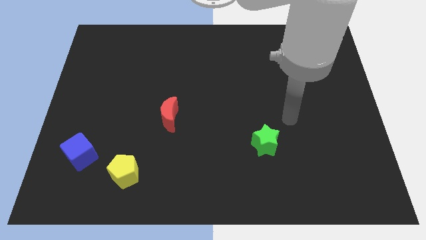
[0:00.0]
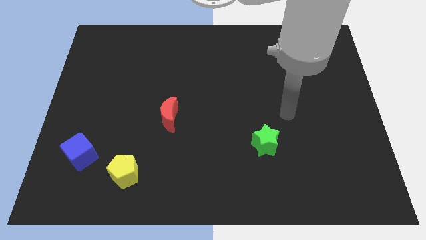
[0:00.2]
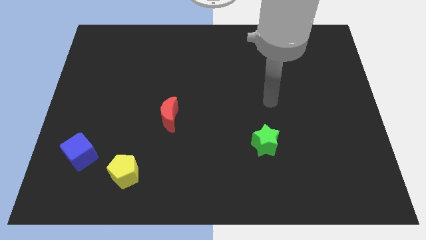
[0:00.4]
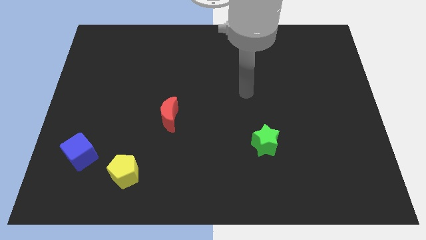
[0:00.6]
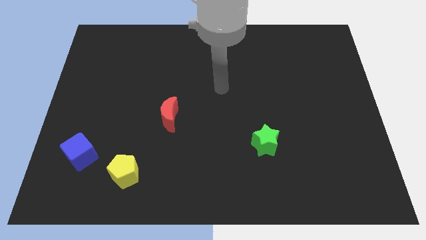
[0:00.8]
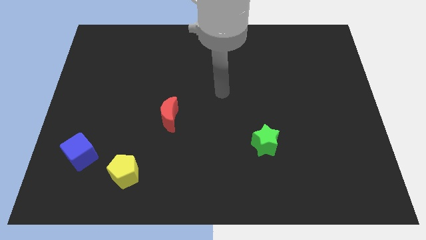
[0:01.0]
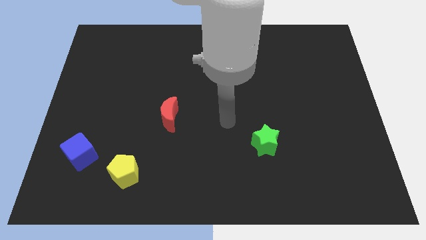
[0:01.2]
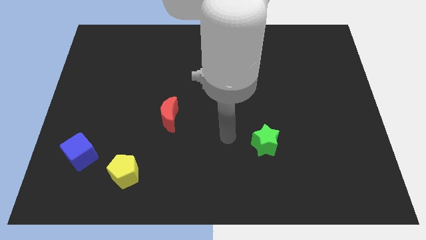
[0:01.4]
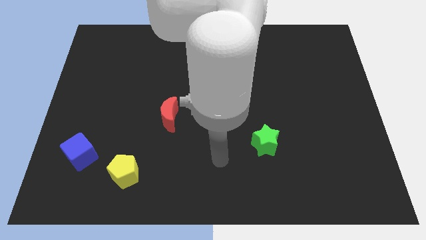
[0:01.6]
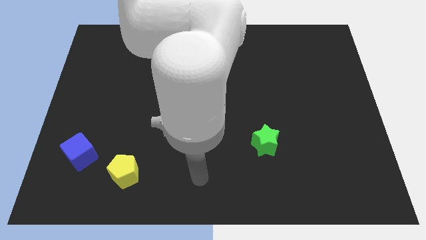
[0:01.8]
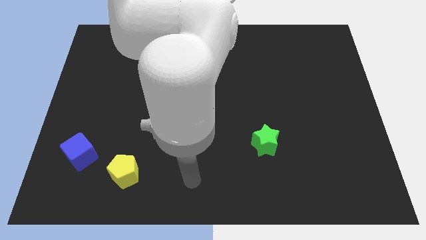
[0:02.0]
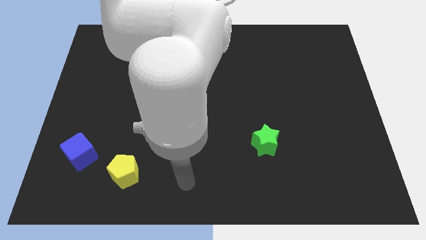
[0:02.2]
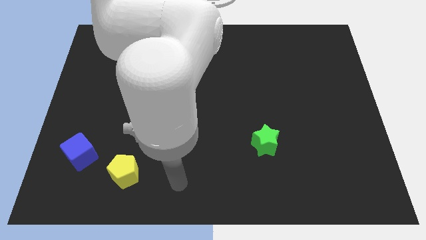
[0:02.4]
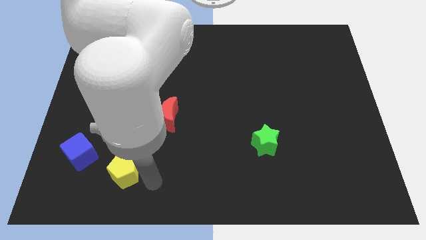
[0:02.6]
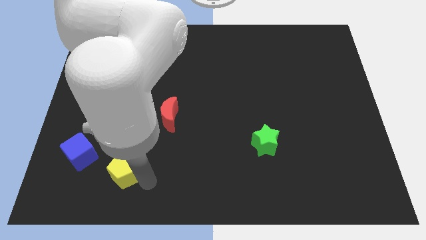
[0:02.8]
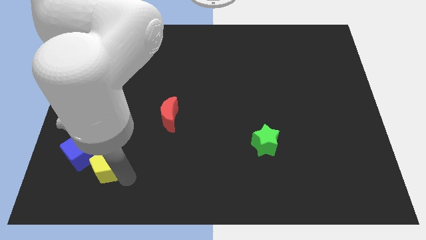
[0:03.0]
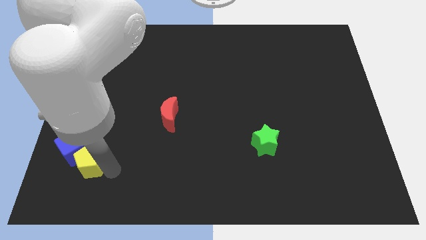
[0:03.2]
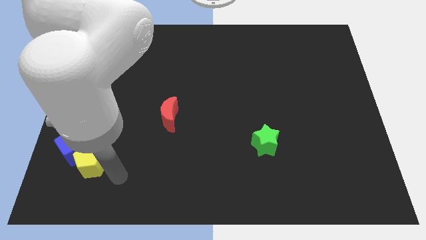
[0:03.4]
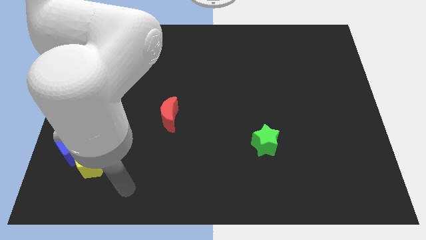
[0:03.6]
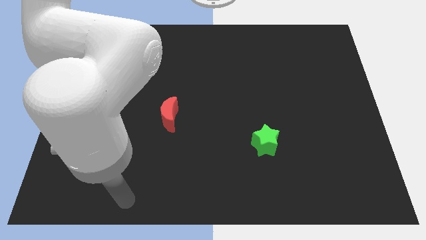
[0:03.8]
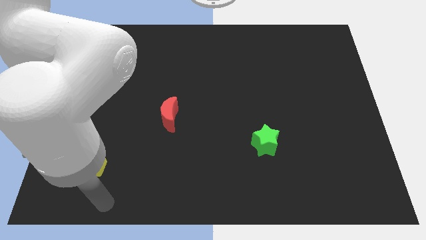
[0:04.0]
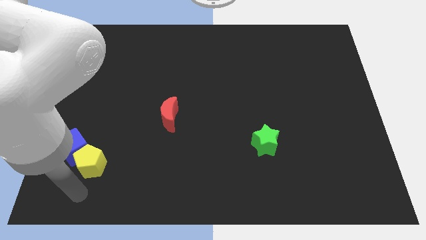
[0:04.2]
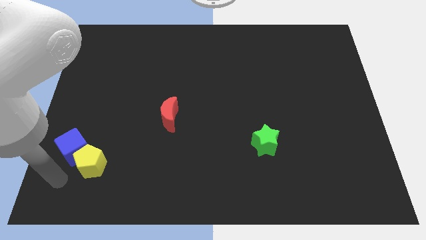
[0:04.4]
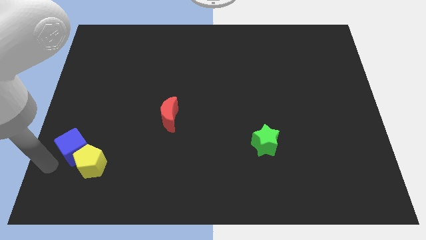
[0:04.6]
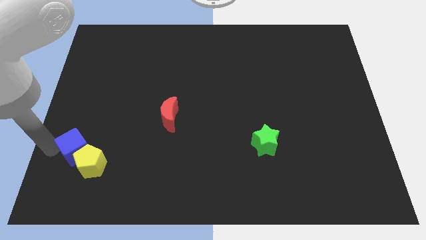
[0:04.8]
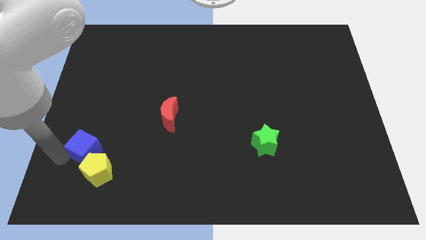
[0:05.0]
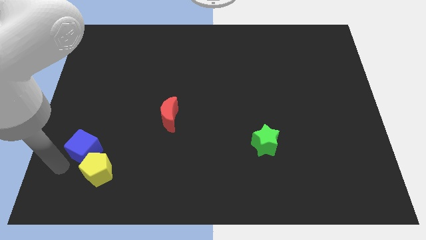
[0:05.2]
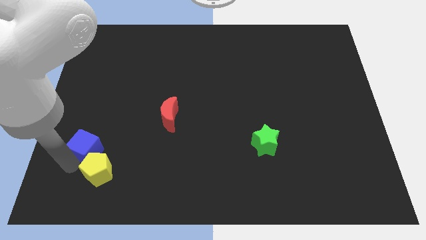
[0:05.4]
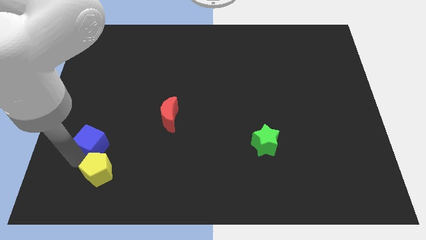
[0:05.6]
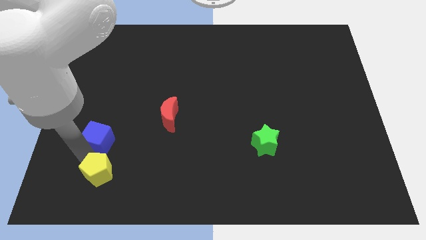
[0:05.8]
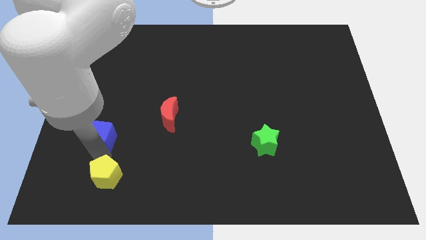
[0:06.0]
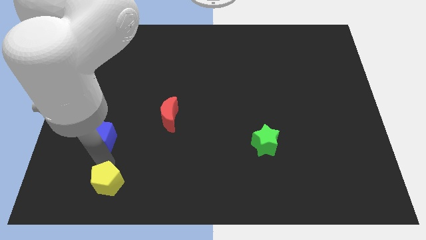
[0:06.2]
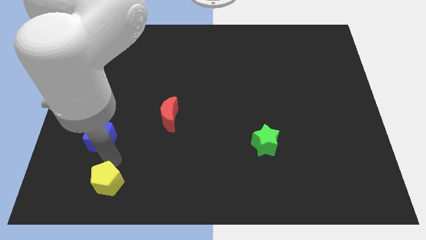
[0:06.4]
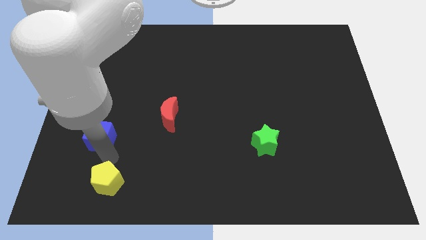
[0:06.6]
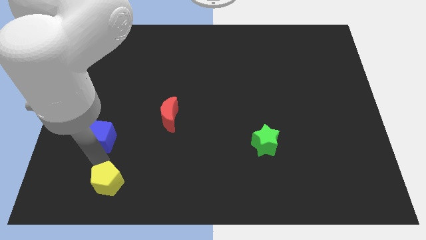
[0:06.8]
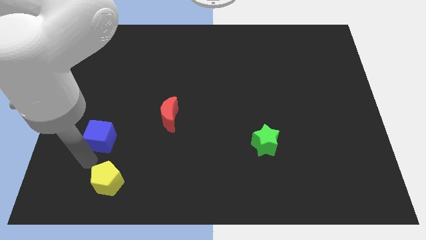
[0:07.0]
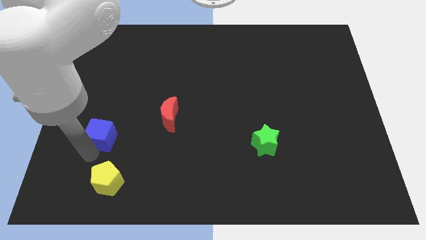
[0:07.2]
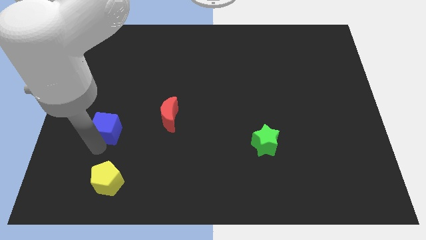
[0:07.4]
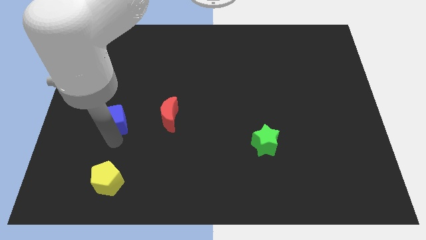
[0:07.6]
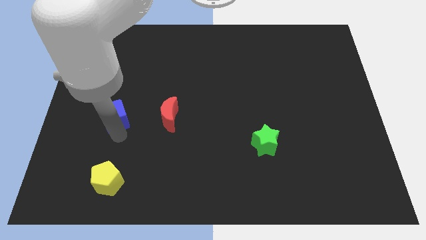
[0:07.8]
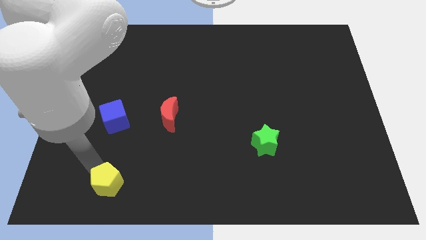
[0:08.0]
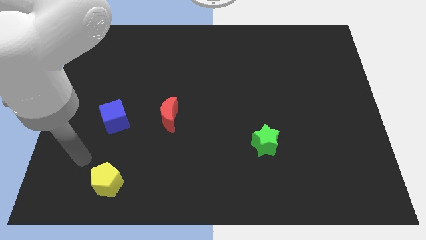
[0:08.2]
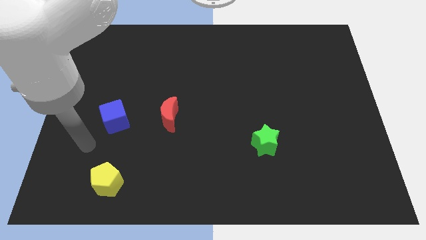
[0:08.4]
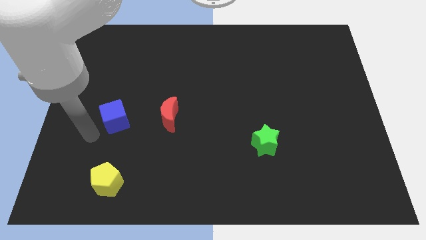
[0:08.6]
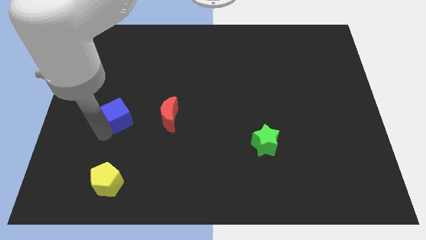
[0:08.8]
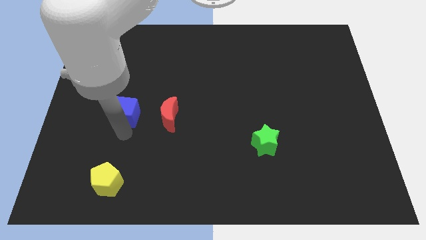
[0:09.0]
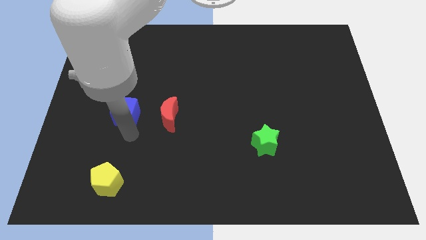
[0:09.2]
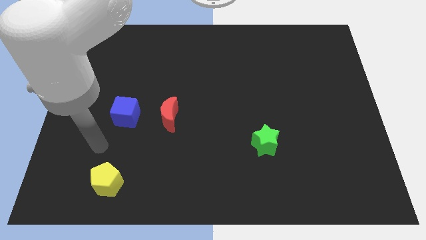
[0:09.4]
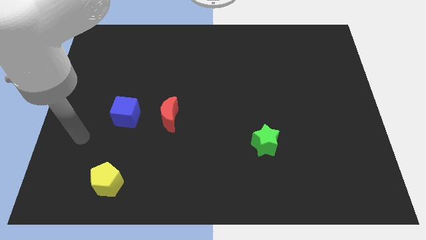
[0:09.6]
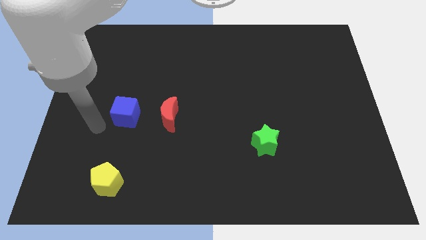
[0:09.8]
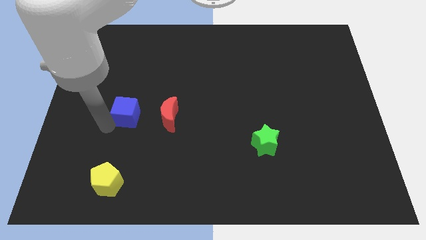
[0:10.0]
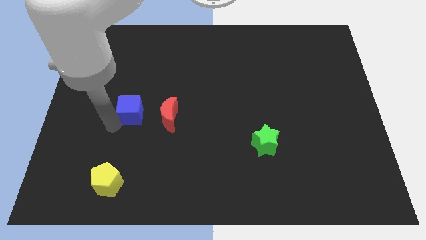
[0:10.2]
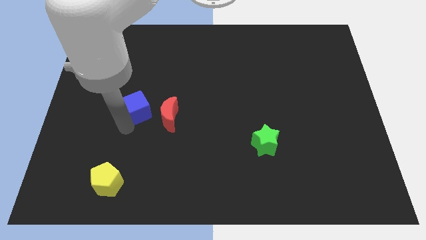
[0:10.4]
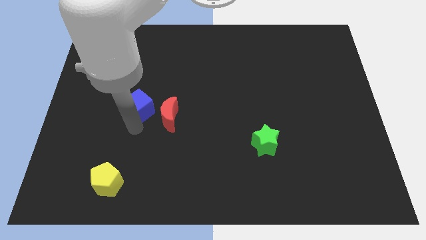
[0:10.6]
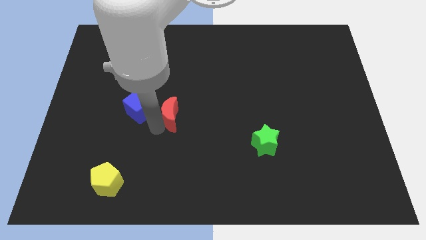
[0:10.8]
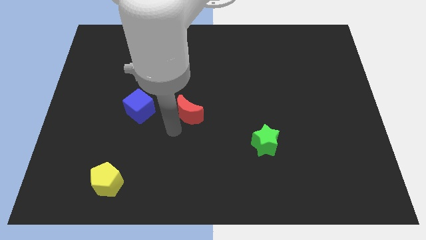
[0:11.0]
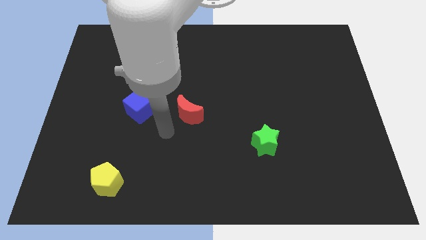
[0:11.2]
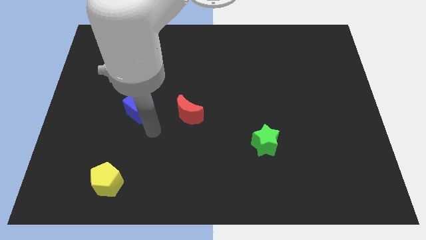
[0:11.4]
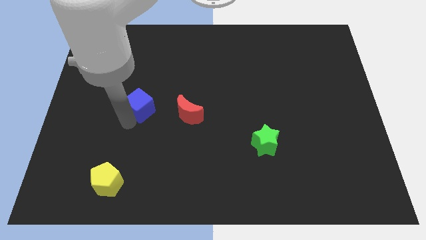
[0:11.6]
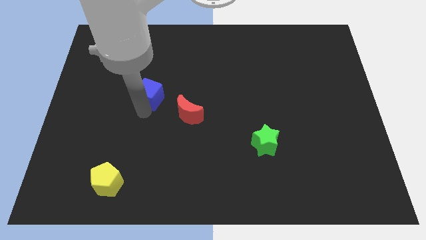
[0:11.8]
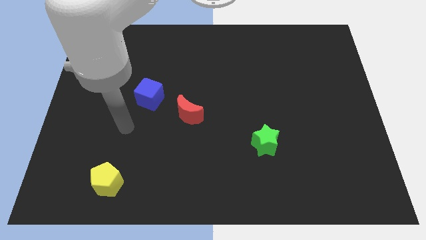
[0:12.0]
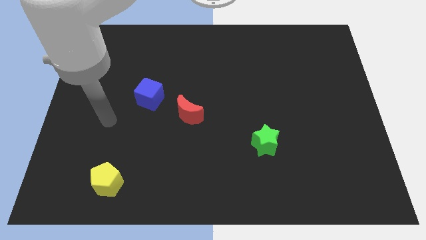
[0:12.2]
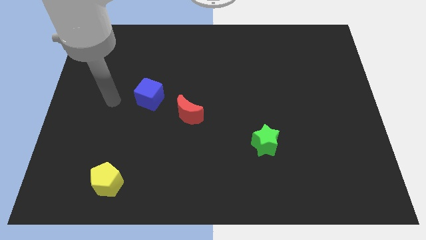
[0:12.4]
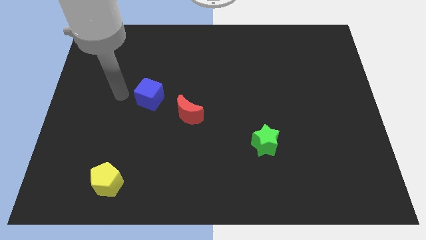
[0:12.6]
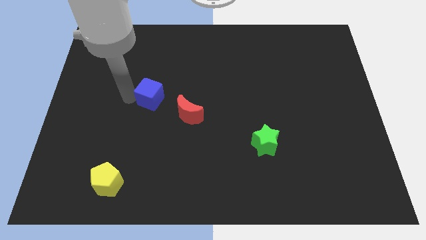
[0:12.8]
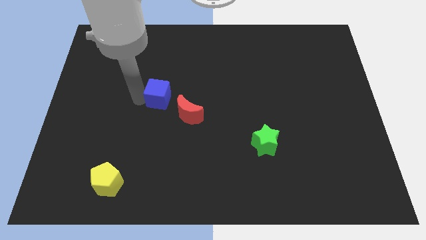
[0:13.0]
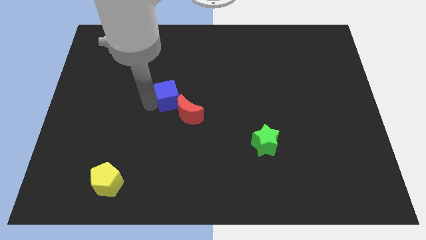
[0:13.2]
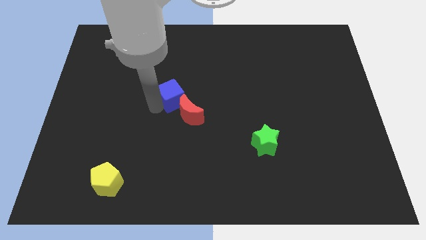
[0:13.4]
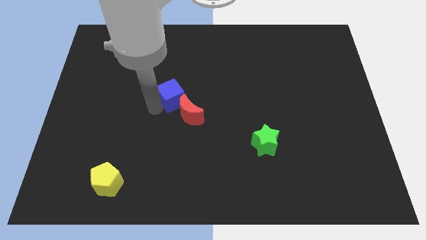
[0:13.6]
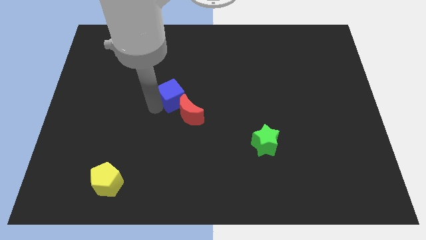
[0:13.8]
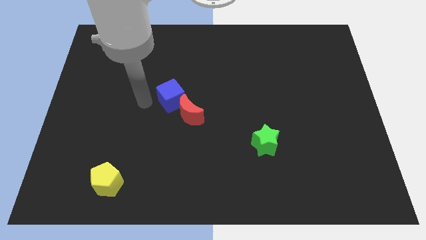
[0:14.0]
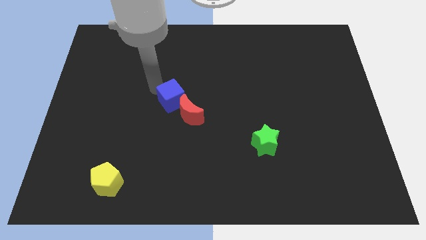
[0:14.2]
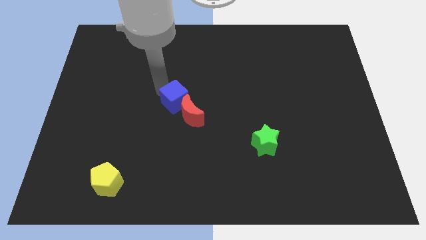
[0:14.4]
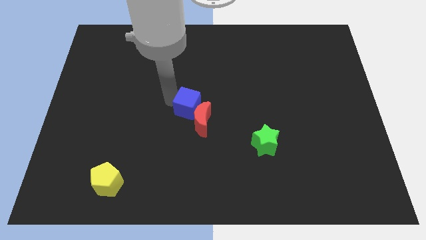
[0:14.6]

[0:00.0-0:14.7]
put the cube to the red moon

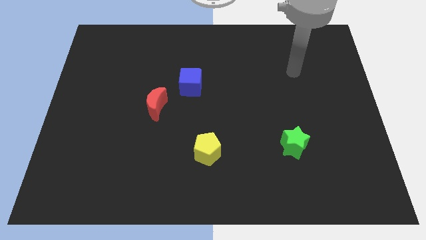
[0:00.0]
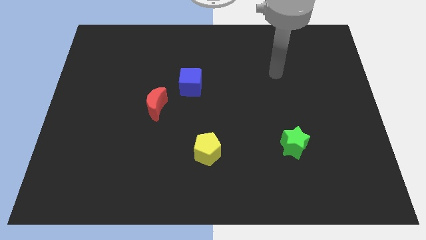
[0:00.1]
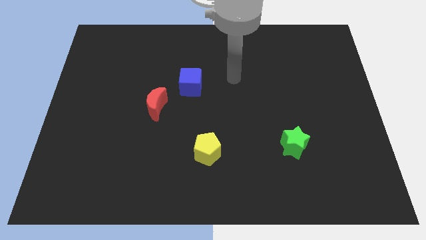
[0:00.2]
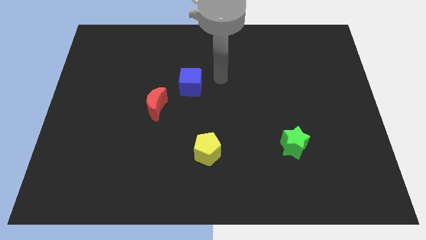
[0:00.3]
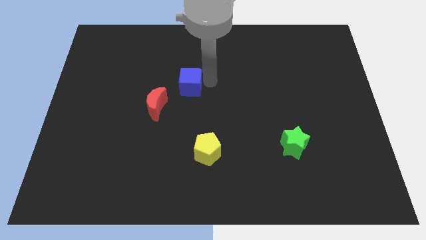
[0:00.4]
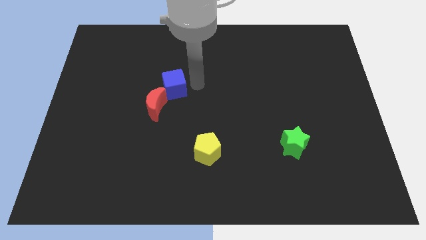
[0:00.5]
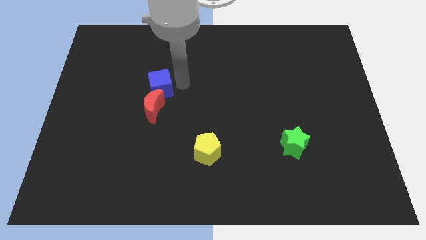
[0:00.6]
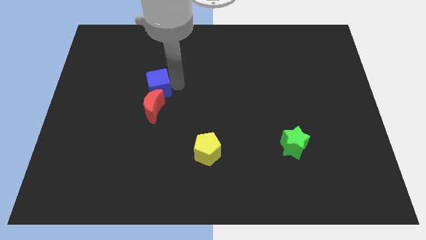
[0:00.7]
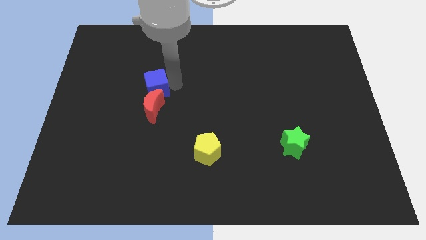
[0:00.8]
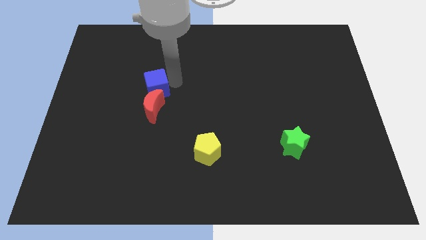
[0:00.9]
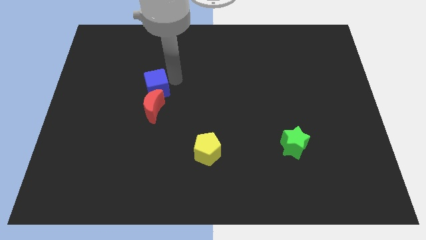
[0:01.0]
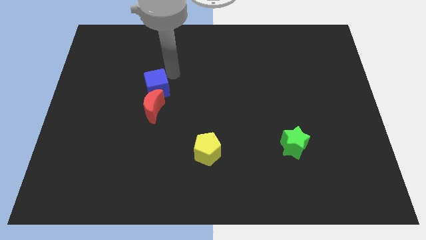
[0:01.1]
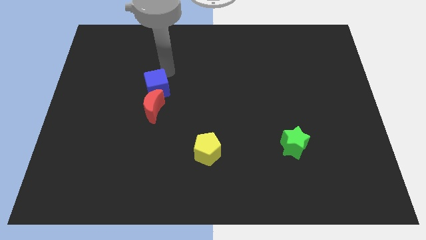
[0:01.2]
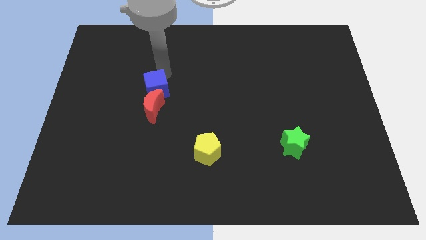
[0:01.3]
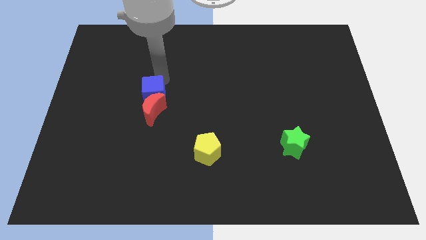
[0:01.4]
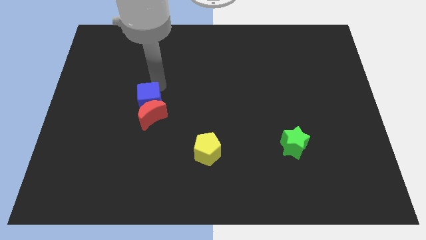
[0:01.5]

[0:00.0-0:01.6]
push the cube next to the red moon
